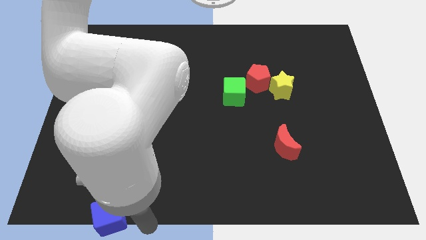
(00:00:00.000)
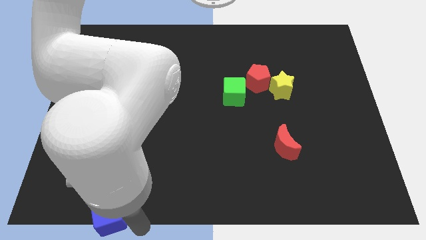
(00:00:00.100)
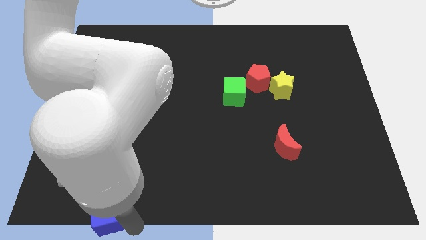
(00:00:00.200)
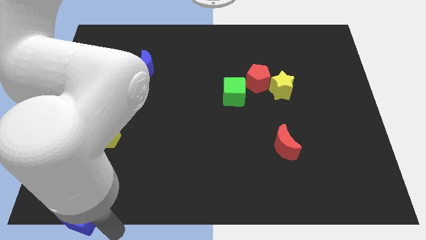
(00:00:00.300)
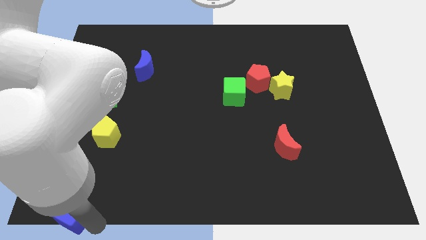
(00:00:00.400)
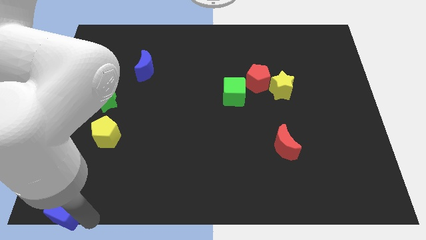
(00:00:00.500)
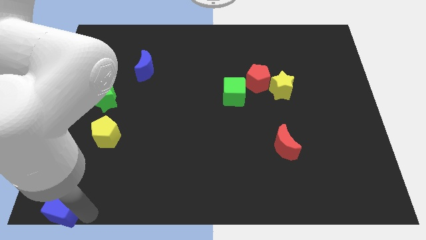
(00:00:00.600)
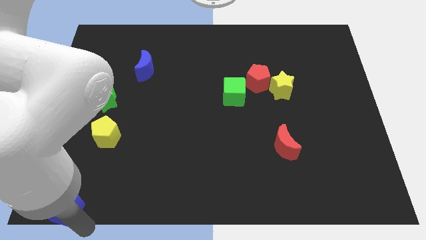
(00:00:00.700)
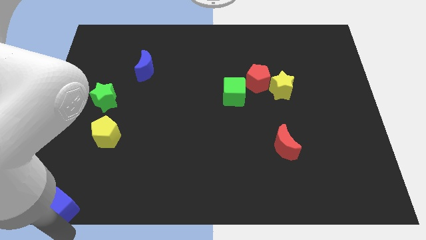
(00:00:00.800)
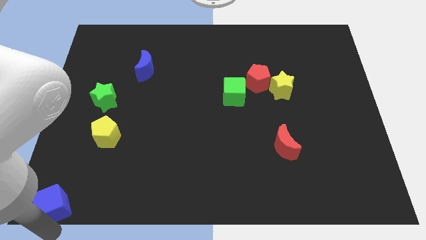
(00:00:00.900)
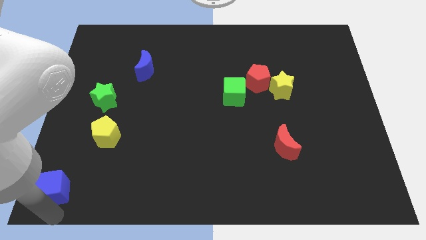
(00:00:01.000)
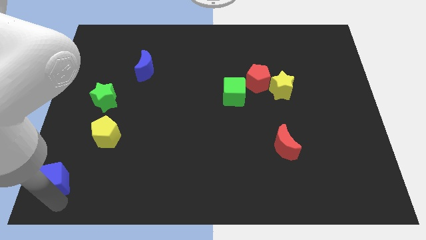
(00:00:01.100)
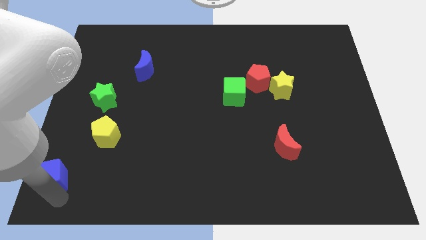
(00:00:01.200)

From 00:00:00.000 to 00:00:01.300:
move the blue cube to the left

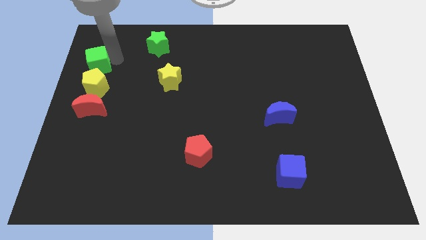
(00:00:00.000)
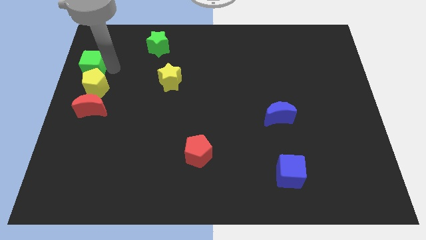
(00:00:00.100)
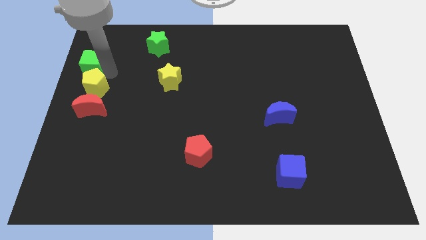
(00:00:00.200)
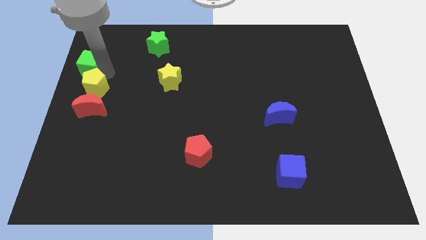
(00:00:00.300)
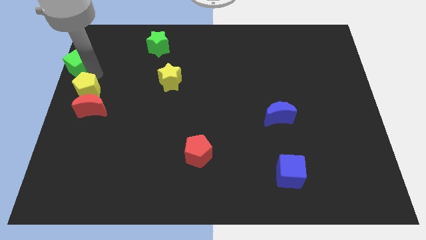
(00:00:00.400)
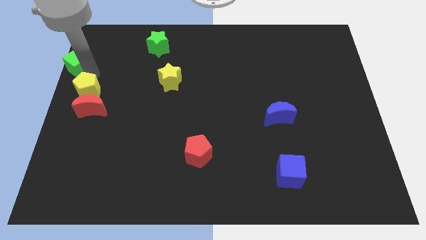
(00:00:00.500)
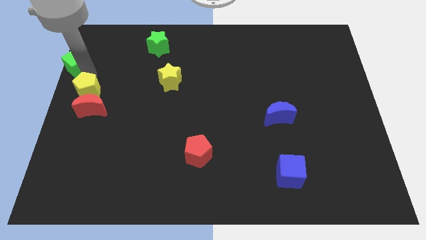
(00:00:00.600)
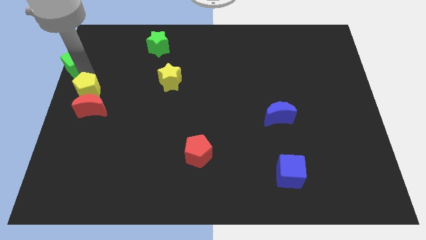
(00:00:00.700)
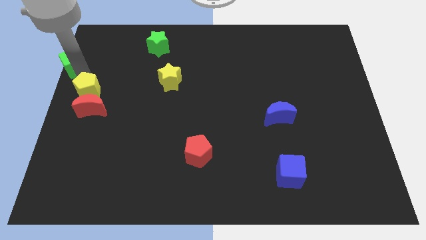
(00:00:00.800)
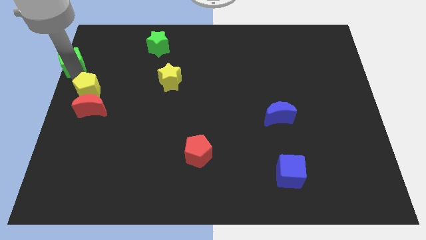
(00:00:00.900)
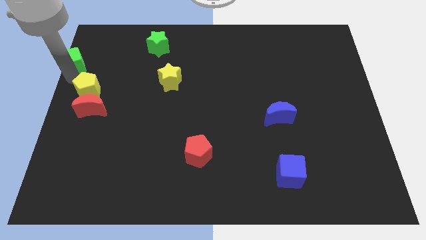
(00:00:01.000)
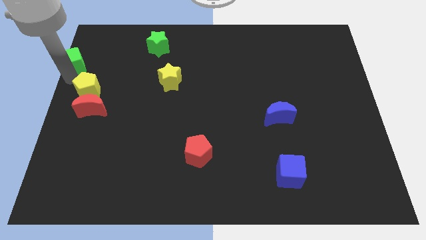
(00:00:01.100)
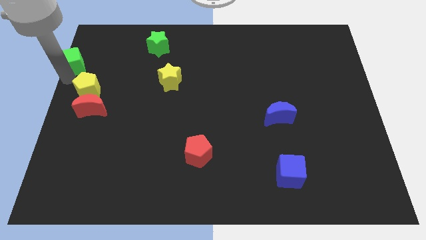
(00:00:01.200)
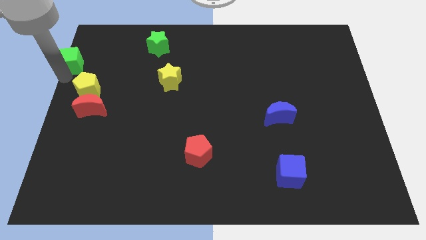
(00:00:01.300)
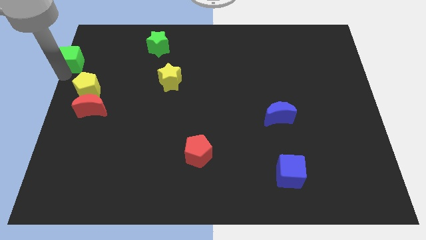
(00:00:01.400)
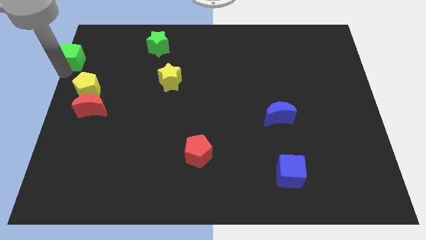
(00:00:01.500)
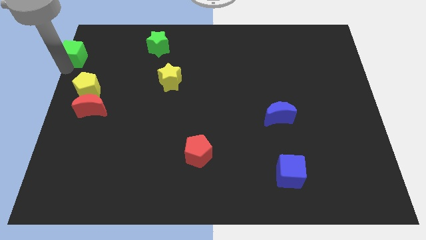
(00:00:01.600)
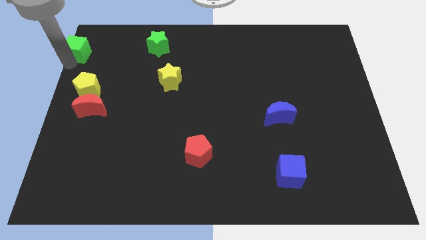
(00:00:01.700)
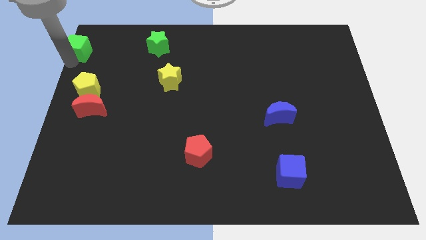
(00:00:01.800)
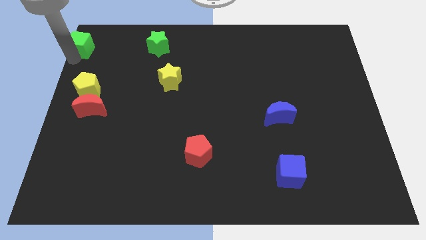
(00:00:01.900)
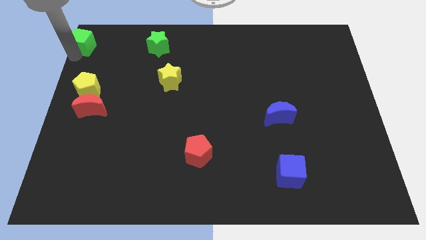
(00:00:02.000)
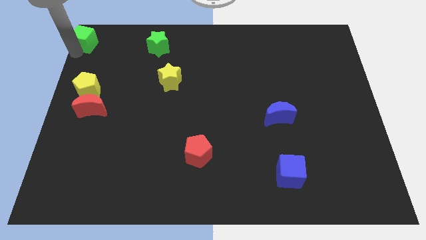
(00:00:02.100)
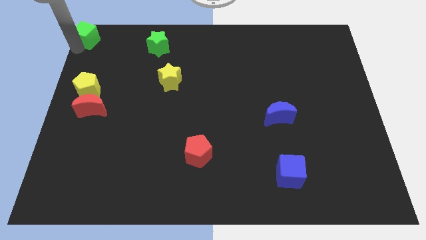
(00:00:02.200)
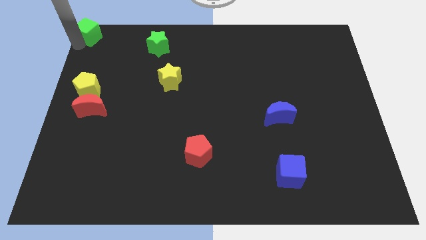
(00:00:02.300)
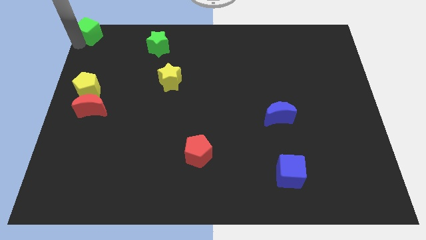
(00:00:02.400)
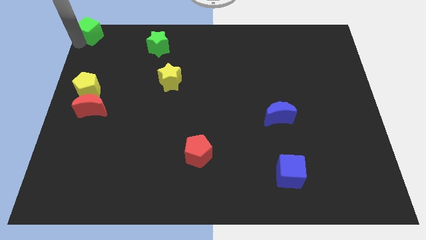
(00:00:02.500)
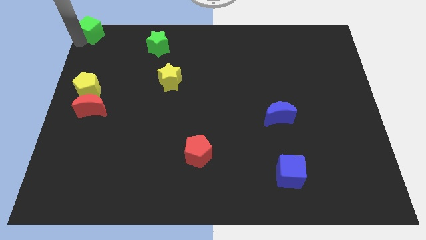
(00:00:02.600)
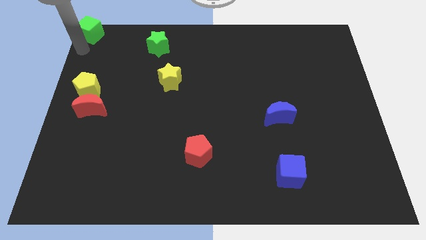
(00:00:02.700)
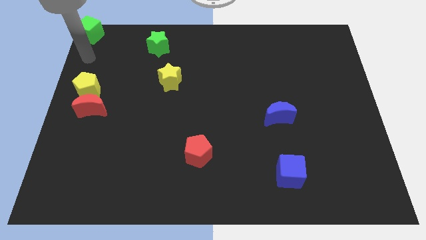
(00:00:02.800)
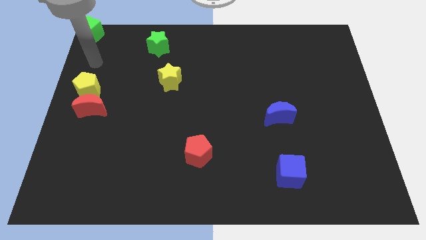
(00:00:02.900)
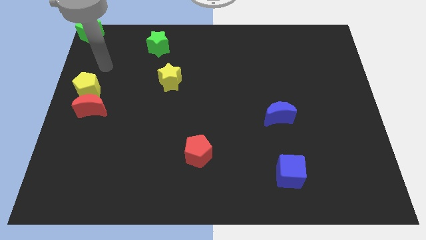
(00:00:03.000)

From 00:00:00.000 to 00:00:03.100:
place green cube on top left corner of board

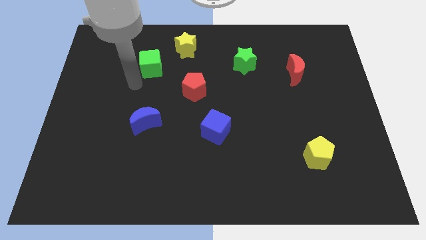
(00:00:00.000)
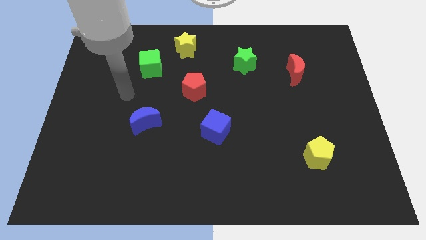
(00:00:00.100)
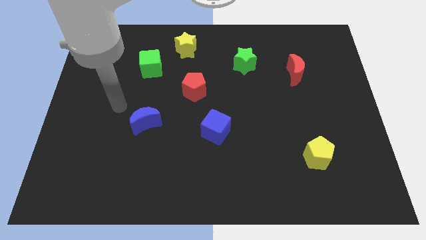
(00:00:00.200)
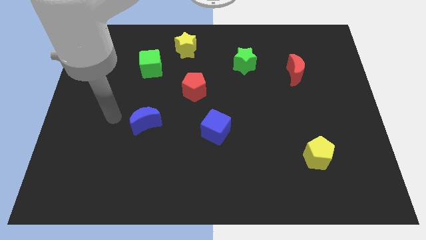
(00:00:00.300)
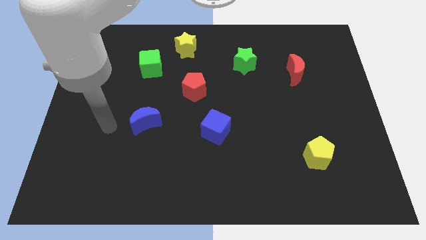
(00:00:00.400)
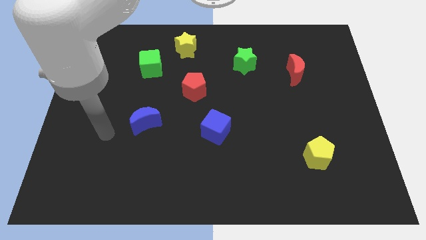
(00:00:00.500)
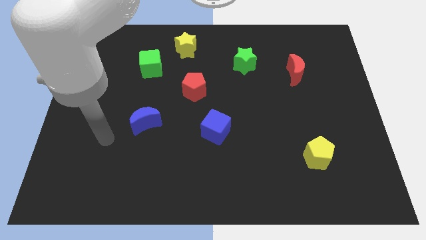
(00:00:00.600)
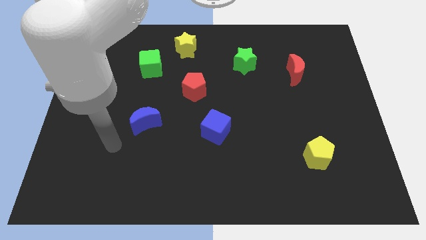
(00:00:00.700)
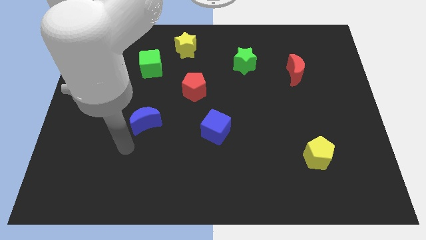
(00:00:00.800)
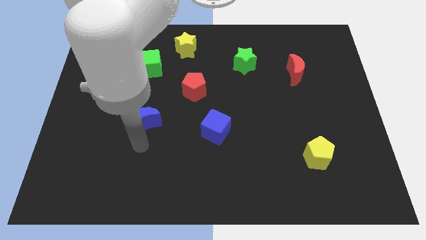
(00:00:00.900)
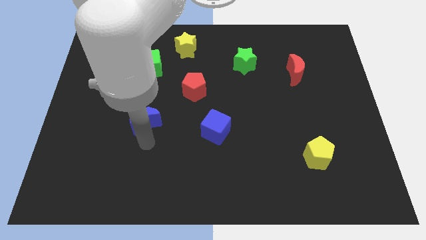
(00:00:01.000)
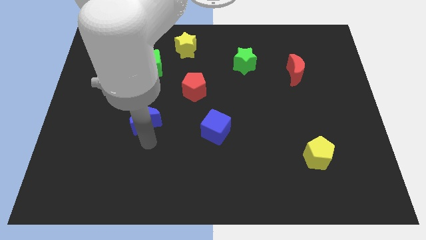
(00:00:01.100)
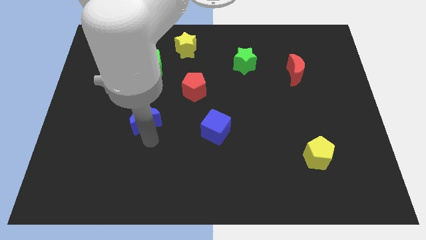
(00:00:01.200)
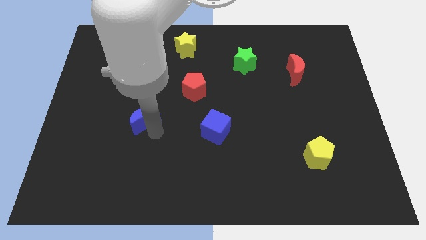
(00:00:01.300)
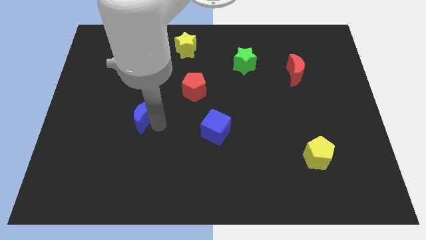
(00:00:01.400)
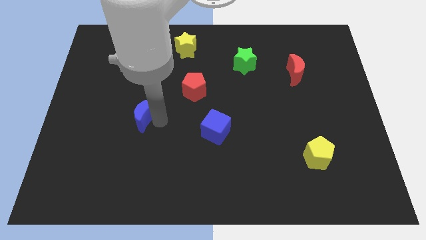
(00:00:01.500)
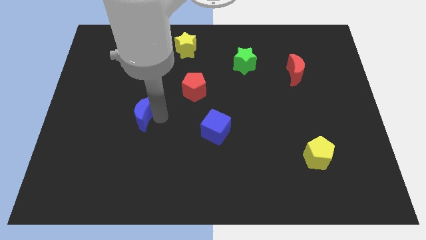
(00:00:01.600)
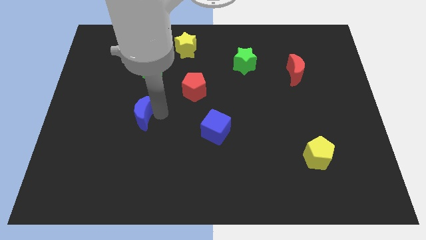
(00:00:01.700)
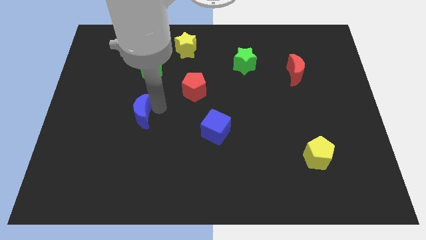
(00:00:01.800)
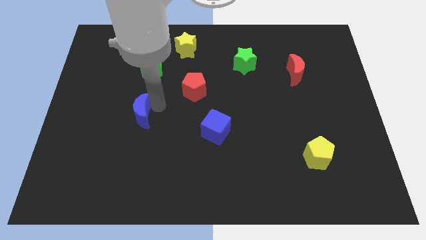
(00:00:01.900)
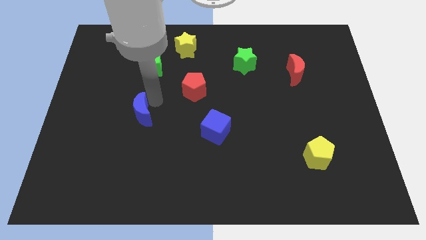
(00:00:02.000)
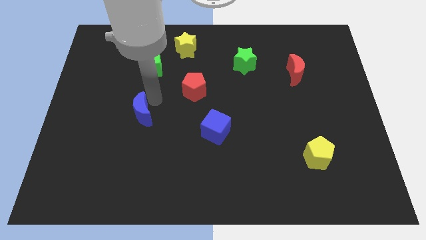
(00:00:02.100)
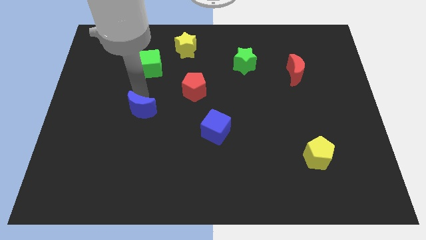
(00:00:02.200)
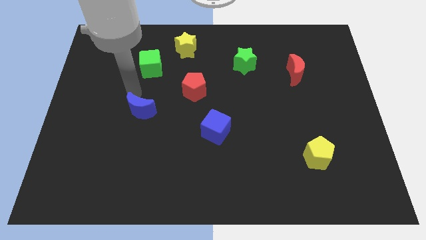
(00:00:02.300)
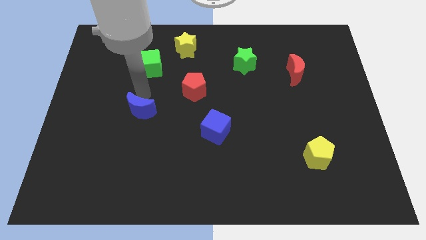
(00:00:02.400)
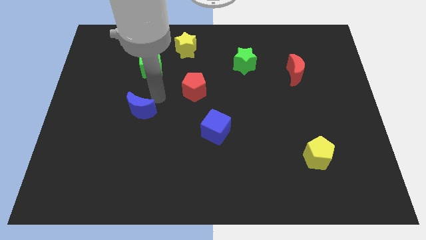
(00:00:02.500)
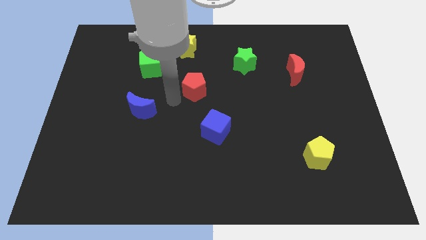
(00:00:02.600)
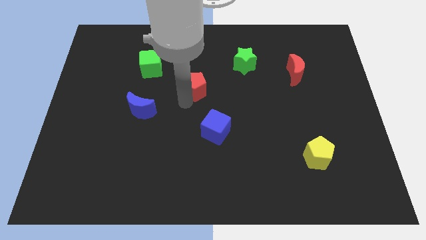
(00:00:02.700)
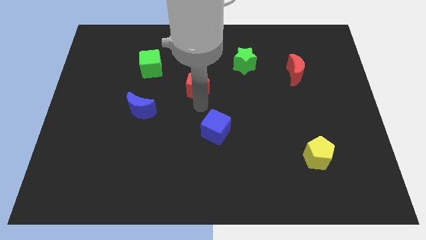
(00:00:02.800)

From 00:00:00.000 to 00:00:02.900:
push the blue moon towards the green block

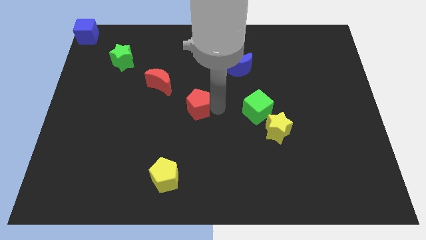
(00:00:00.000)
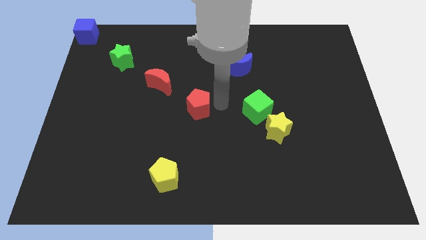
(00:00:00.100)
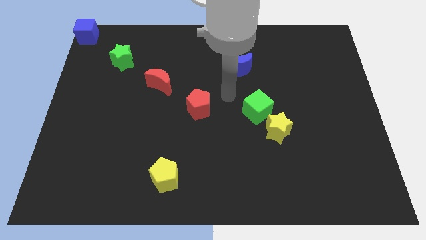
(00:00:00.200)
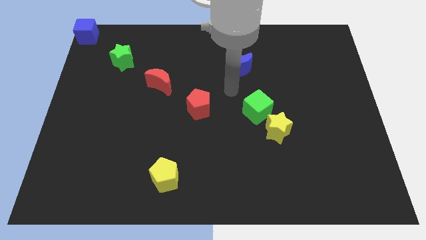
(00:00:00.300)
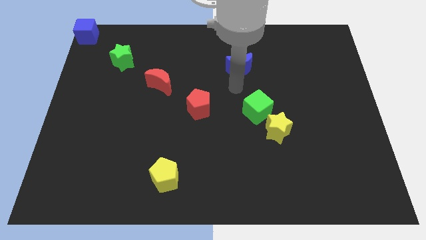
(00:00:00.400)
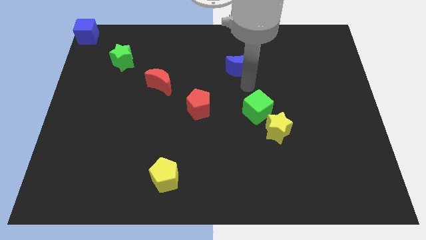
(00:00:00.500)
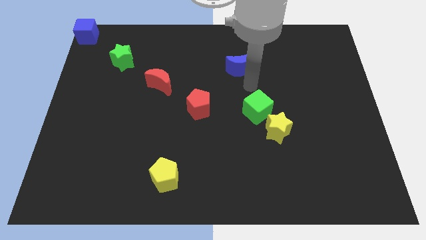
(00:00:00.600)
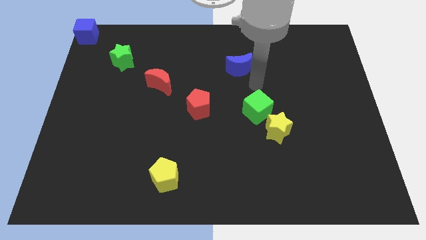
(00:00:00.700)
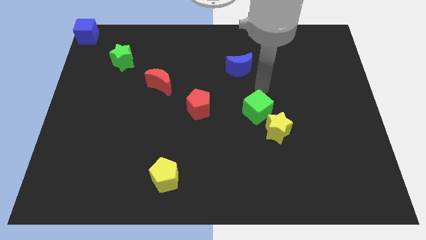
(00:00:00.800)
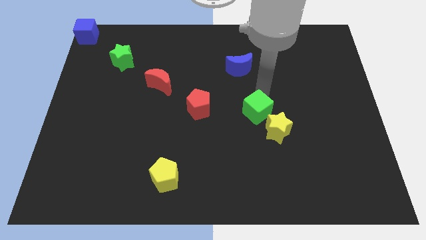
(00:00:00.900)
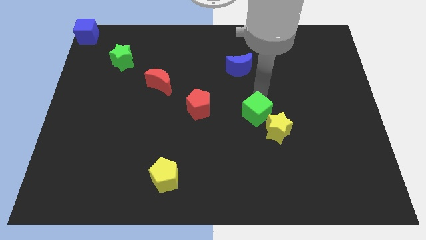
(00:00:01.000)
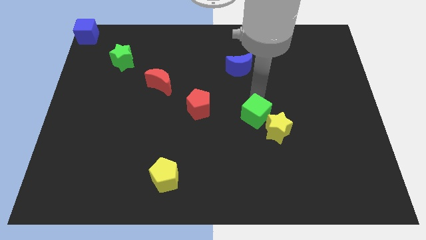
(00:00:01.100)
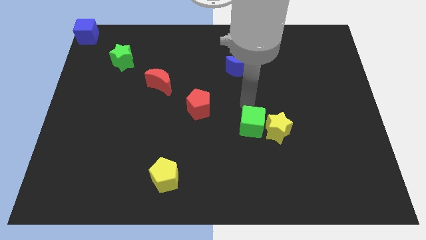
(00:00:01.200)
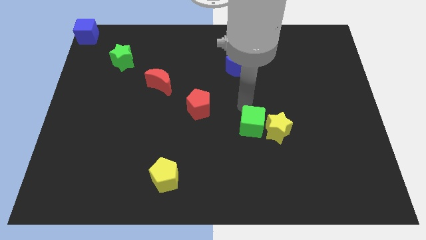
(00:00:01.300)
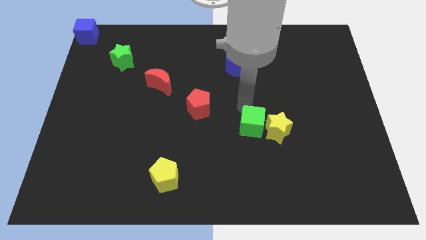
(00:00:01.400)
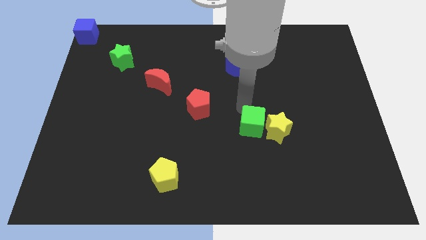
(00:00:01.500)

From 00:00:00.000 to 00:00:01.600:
push the green cube to the left of the yellow star
